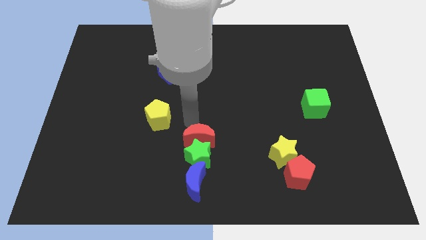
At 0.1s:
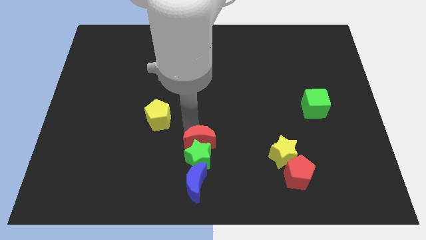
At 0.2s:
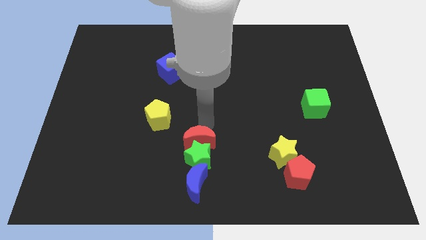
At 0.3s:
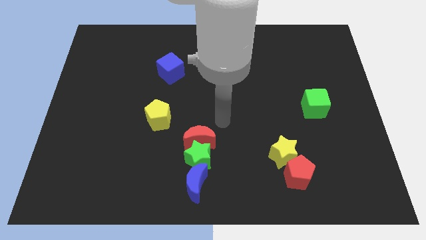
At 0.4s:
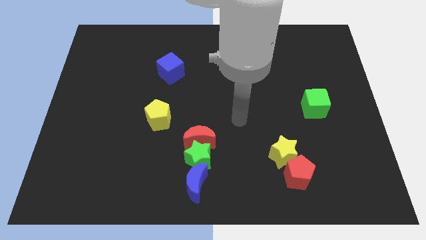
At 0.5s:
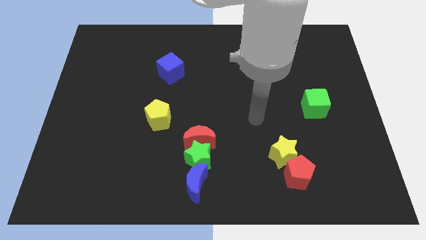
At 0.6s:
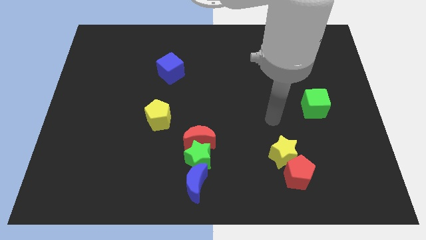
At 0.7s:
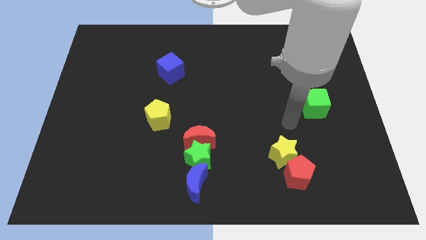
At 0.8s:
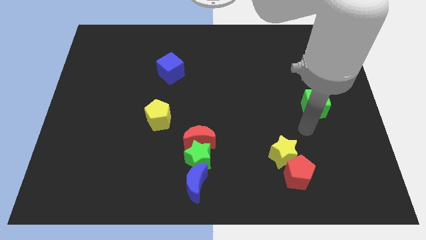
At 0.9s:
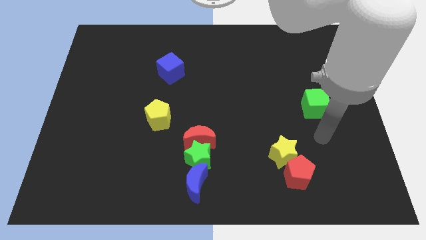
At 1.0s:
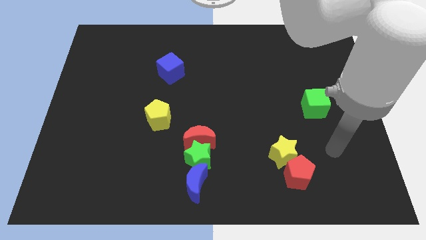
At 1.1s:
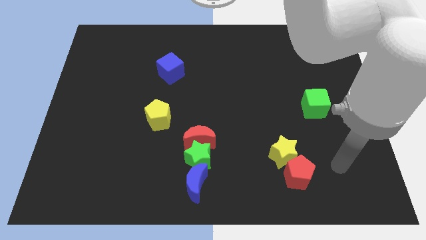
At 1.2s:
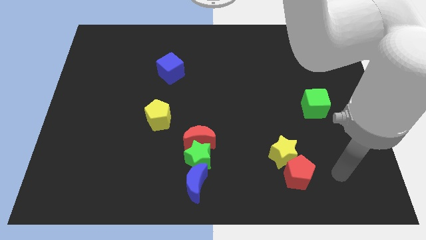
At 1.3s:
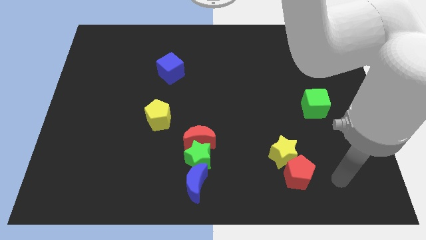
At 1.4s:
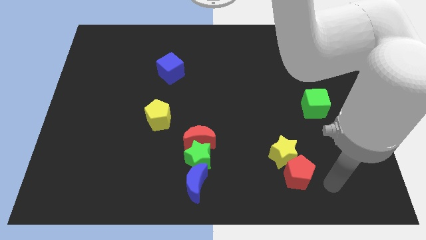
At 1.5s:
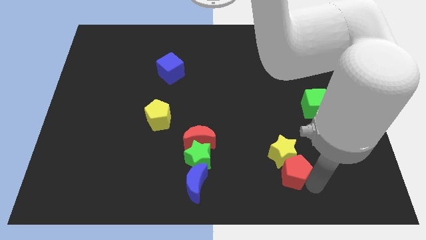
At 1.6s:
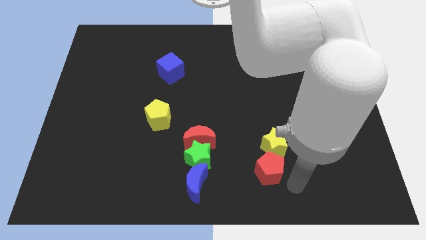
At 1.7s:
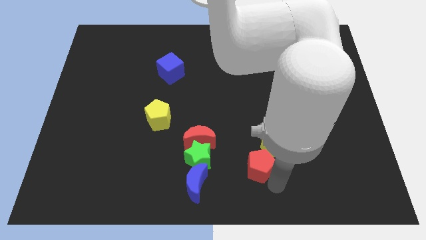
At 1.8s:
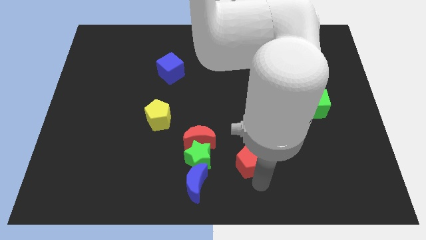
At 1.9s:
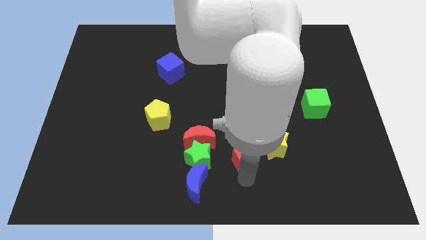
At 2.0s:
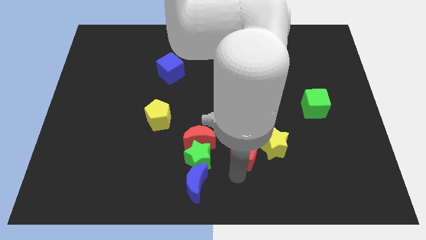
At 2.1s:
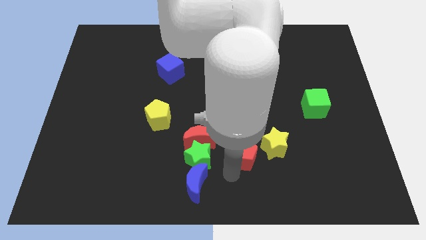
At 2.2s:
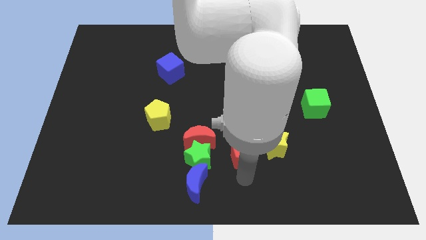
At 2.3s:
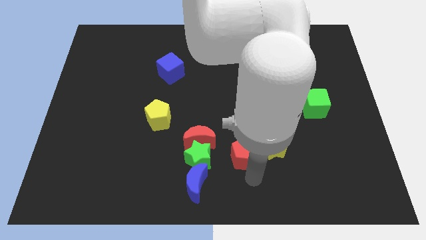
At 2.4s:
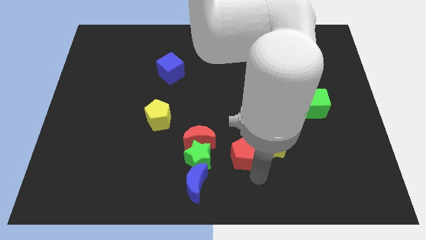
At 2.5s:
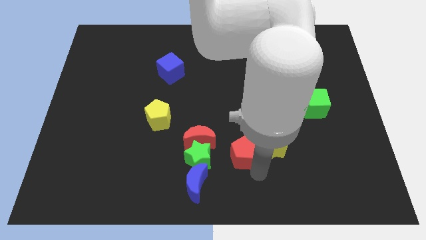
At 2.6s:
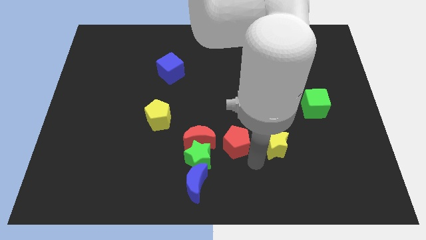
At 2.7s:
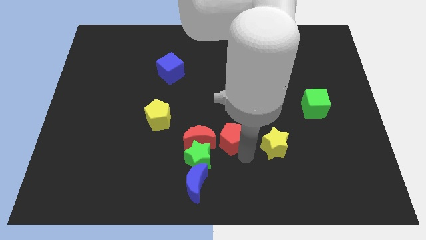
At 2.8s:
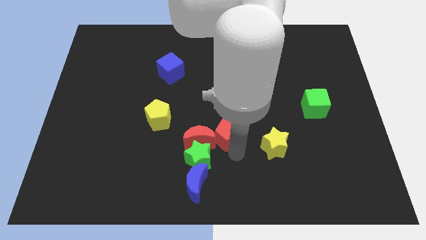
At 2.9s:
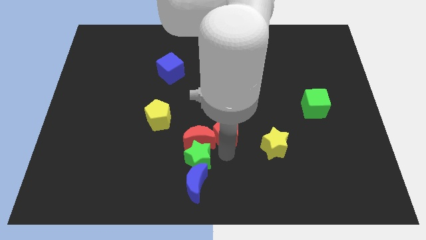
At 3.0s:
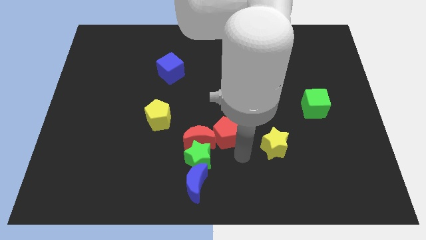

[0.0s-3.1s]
separate red pentagon from the yellow star

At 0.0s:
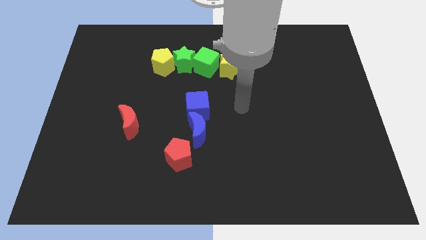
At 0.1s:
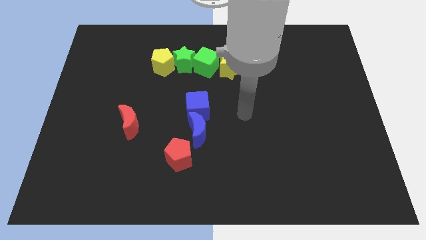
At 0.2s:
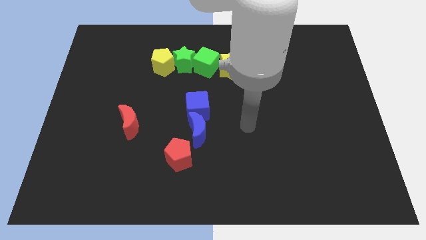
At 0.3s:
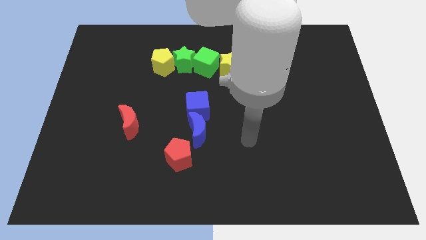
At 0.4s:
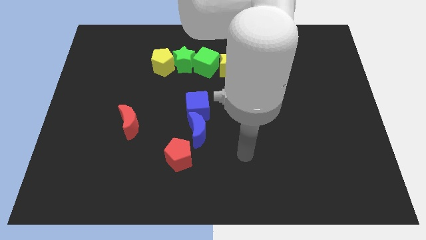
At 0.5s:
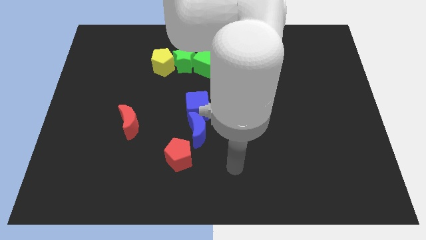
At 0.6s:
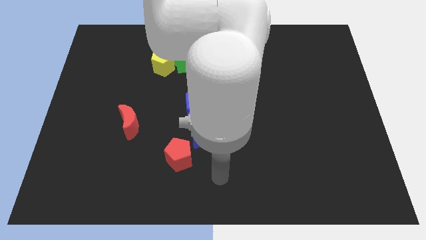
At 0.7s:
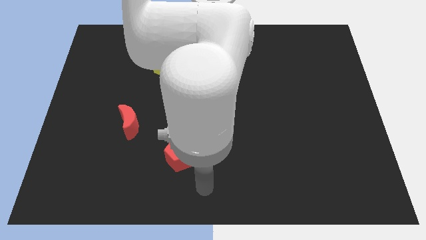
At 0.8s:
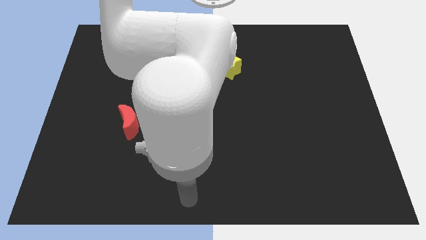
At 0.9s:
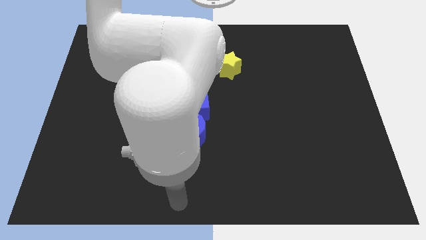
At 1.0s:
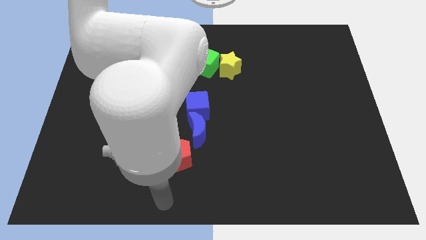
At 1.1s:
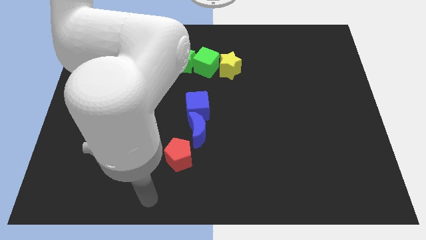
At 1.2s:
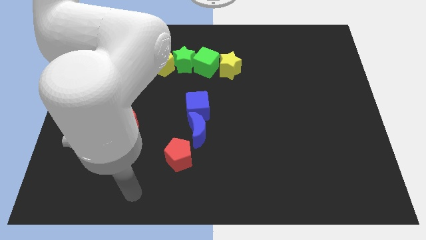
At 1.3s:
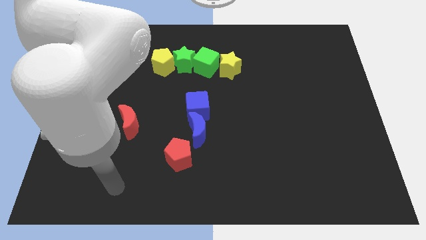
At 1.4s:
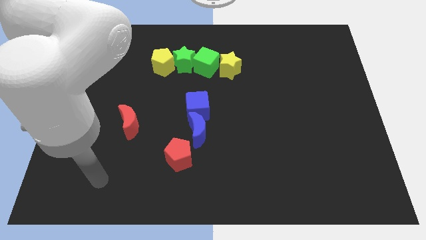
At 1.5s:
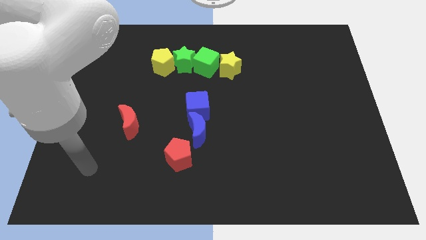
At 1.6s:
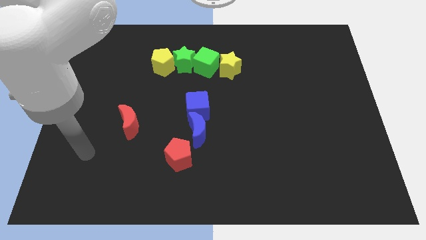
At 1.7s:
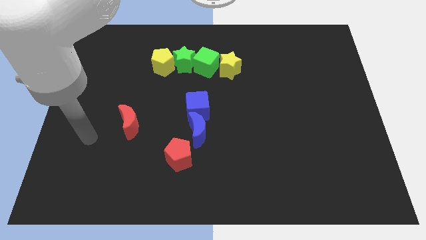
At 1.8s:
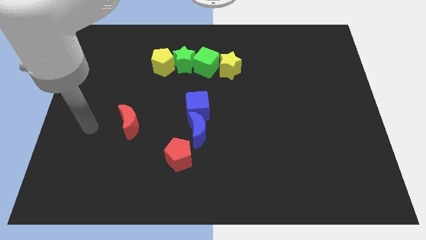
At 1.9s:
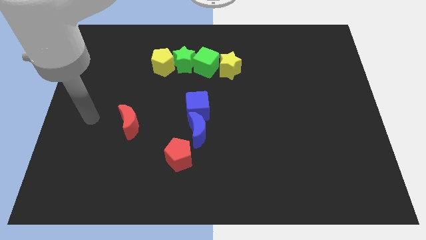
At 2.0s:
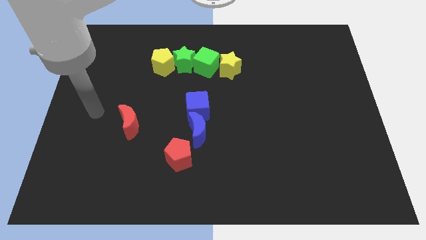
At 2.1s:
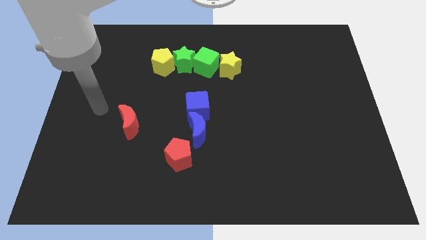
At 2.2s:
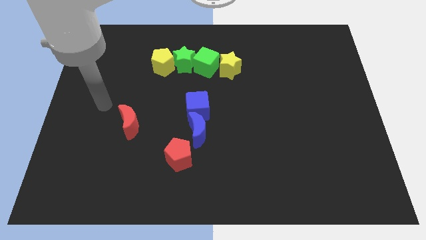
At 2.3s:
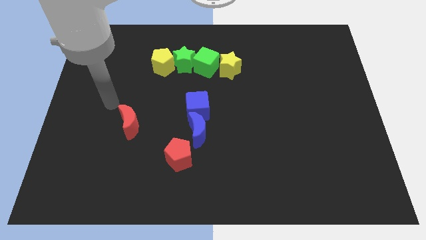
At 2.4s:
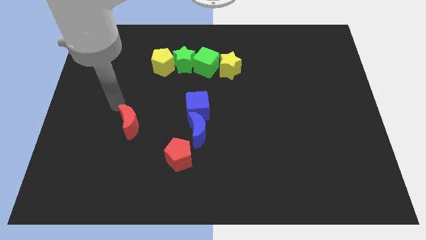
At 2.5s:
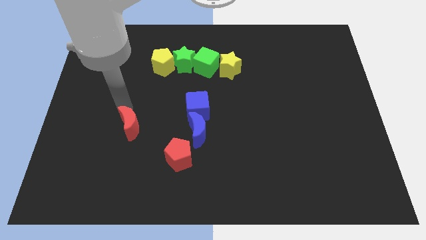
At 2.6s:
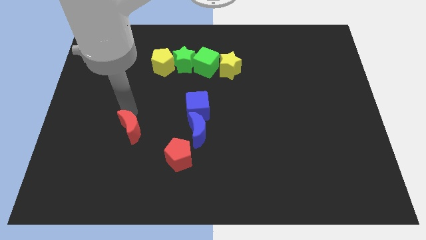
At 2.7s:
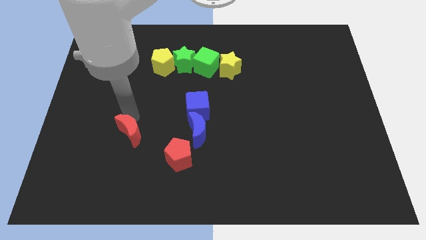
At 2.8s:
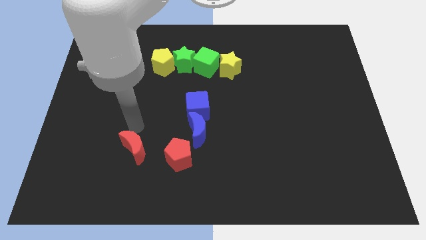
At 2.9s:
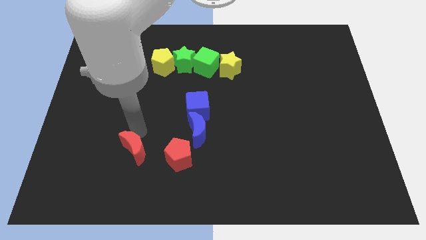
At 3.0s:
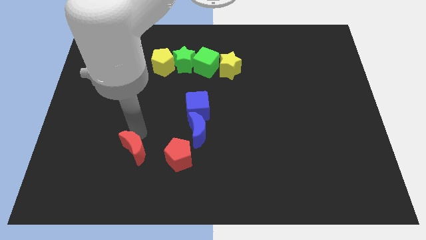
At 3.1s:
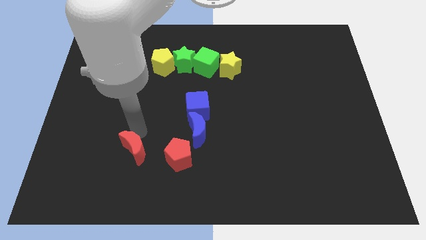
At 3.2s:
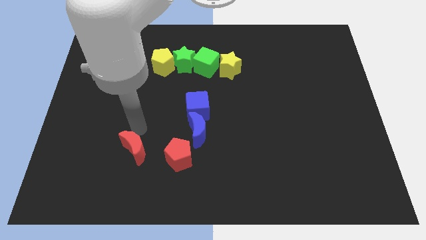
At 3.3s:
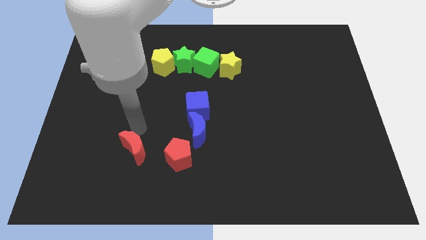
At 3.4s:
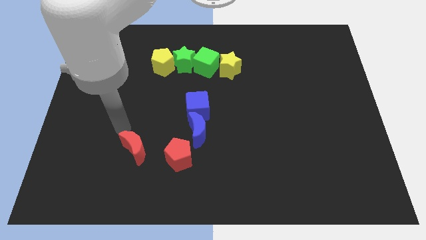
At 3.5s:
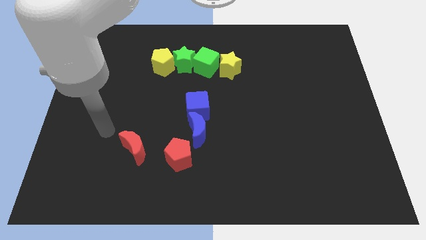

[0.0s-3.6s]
move the red moon to the top left of the red pentagon

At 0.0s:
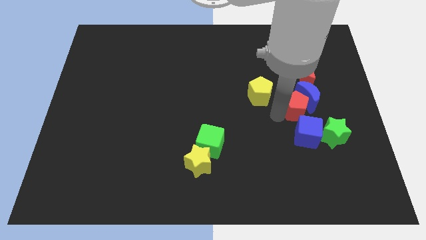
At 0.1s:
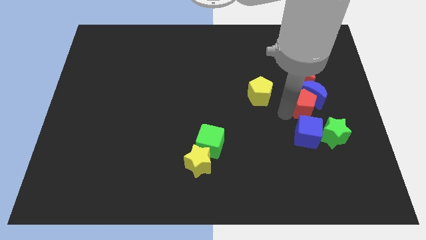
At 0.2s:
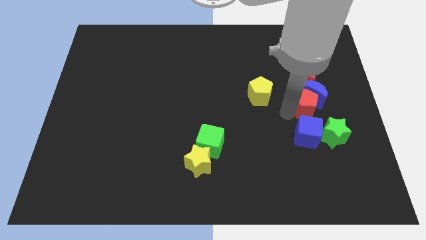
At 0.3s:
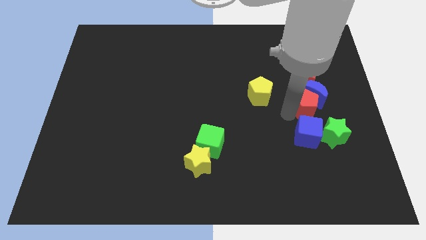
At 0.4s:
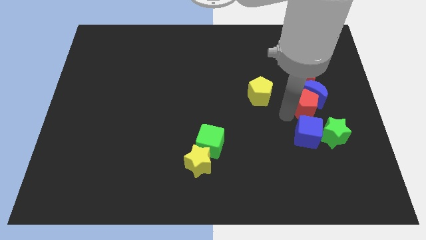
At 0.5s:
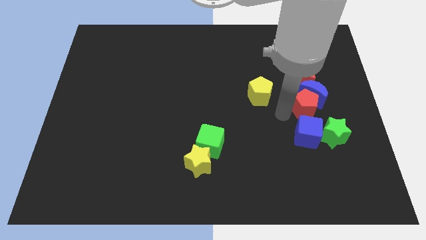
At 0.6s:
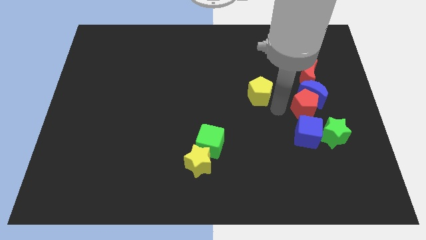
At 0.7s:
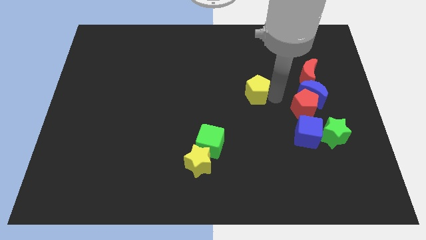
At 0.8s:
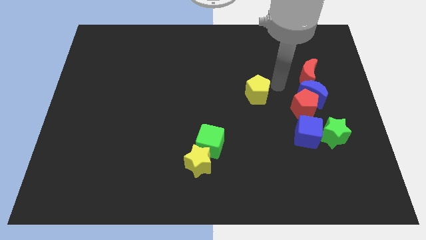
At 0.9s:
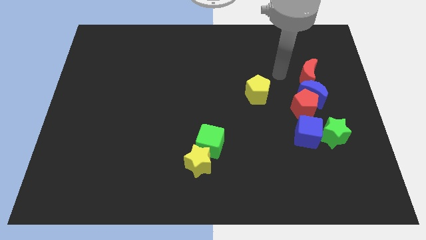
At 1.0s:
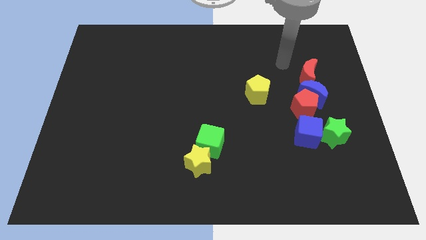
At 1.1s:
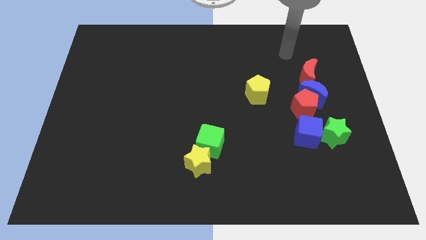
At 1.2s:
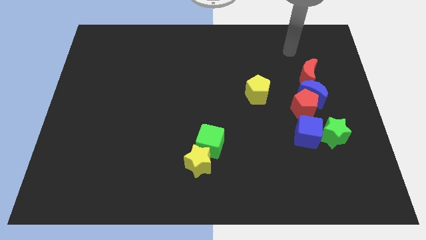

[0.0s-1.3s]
move the red pentagon slightly to the right

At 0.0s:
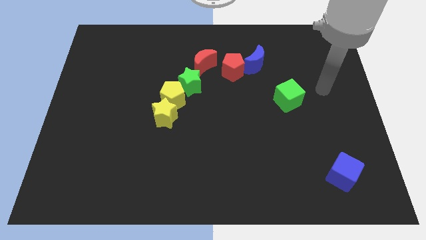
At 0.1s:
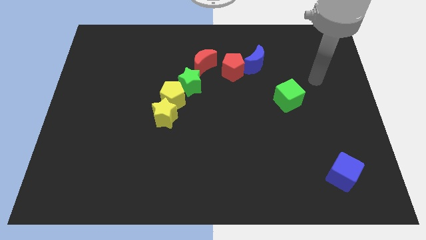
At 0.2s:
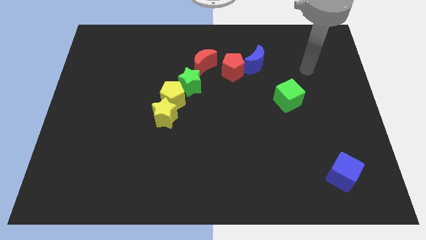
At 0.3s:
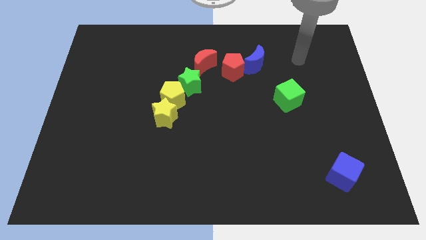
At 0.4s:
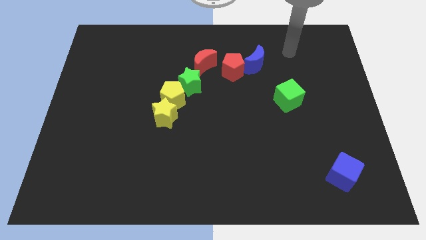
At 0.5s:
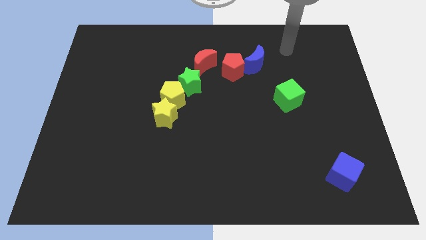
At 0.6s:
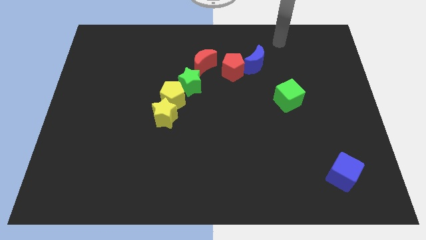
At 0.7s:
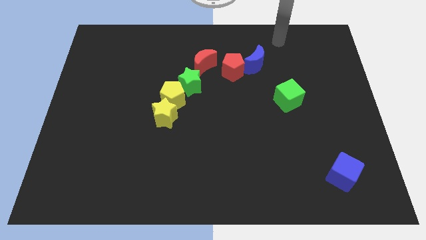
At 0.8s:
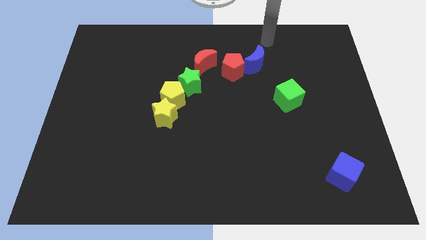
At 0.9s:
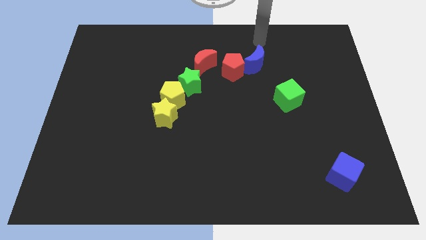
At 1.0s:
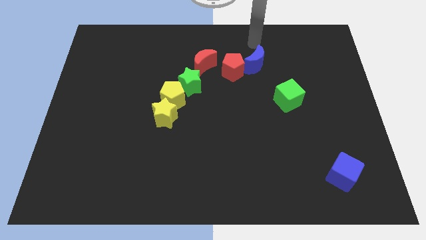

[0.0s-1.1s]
move hand on the top of blue crescent
